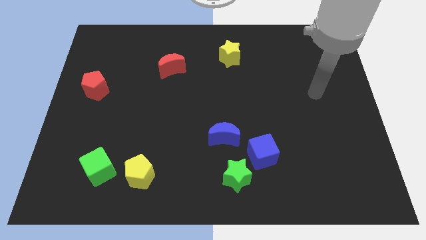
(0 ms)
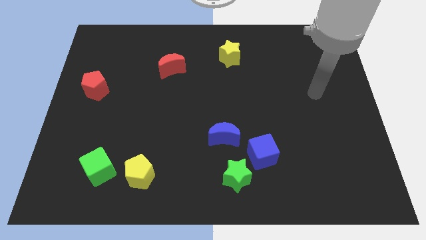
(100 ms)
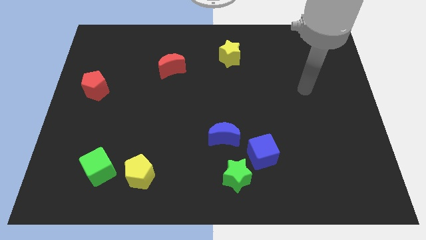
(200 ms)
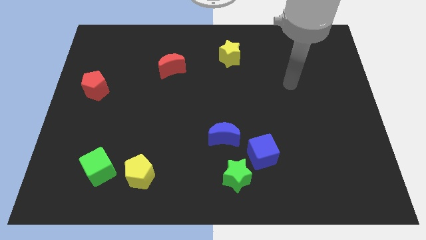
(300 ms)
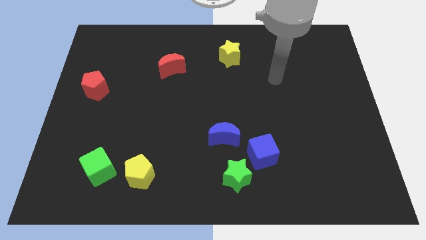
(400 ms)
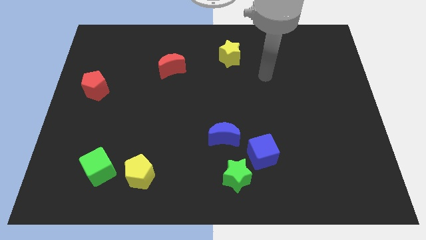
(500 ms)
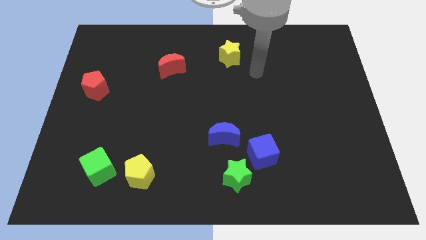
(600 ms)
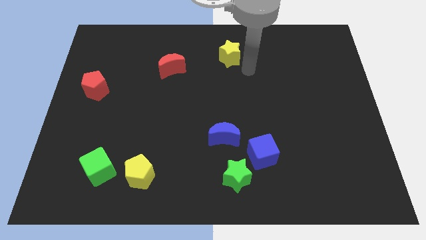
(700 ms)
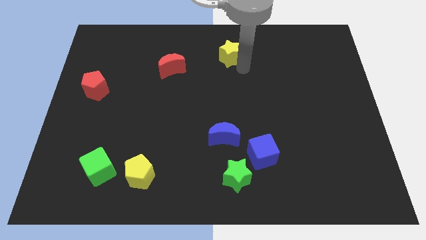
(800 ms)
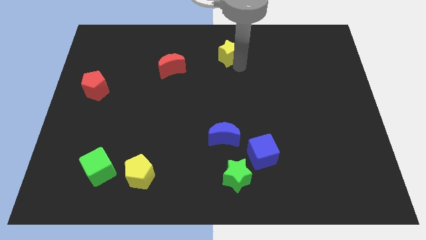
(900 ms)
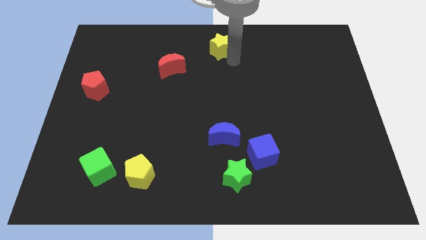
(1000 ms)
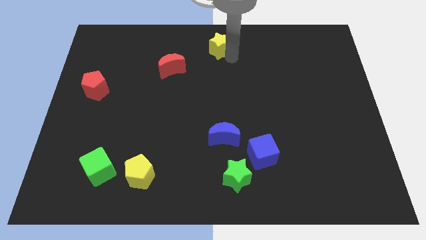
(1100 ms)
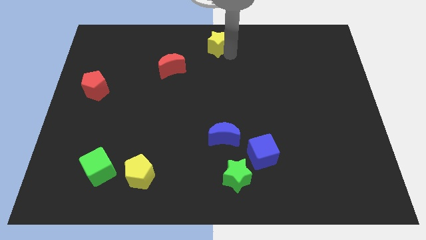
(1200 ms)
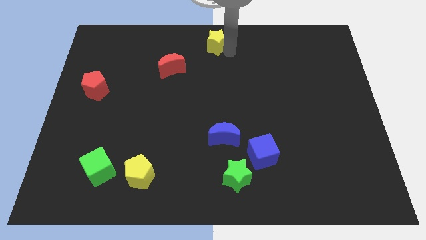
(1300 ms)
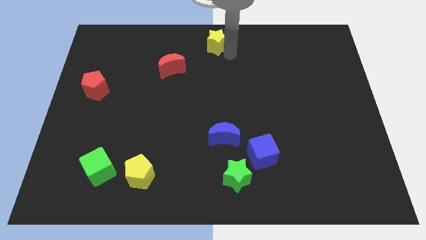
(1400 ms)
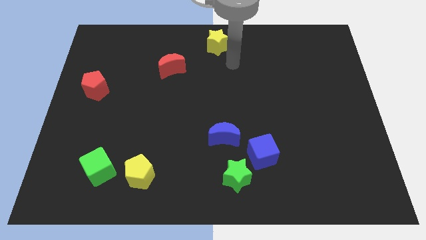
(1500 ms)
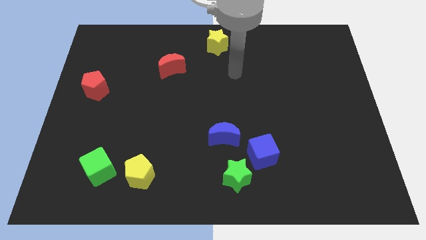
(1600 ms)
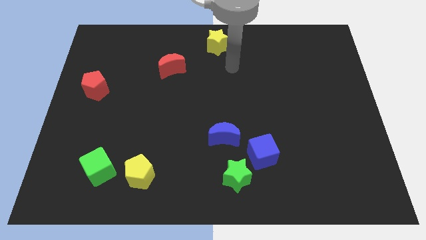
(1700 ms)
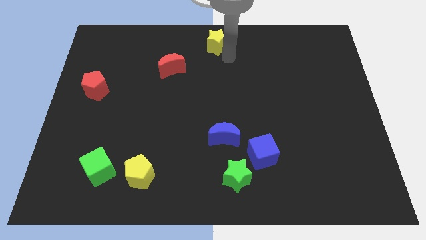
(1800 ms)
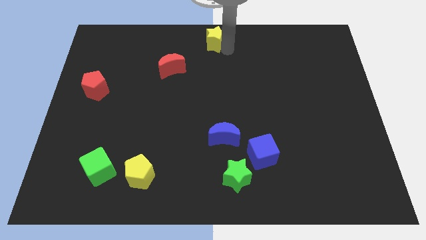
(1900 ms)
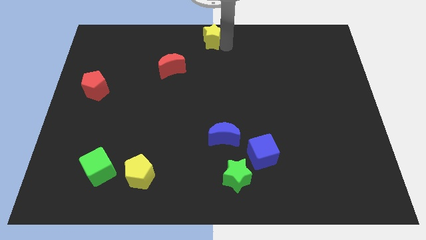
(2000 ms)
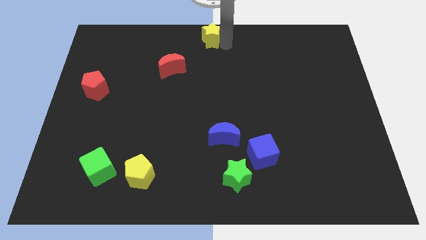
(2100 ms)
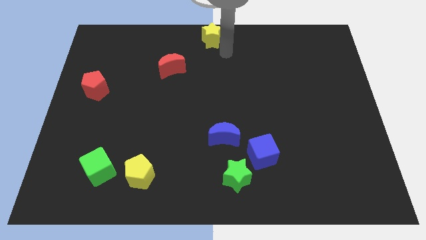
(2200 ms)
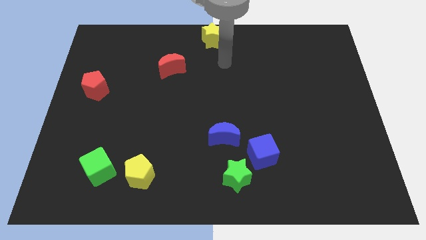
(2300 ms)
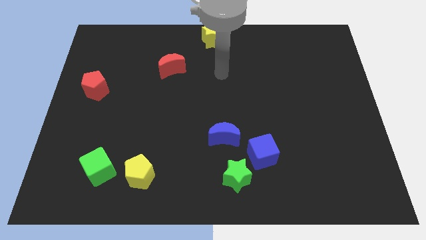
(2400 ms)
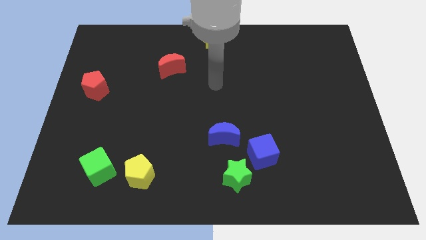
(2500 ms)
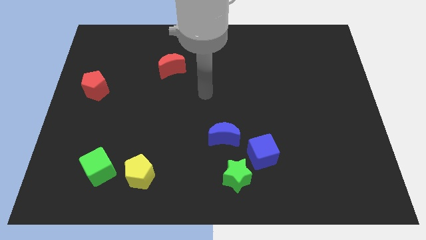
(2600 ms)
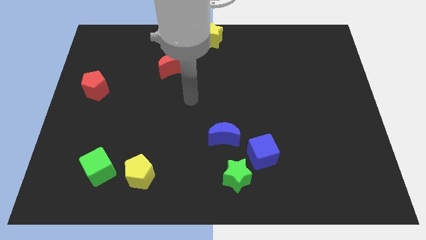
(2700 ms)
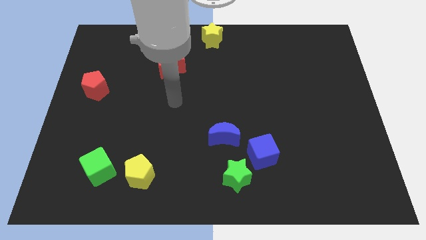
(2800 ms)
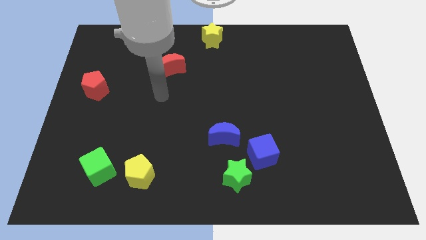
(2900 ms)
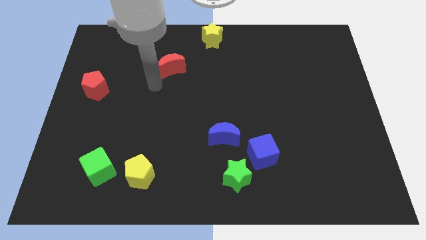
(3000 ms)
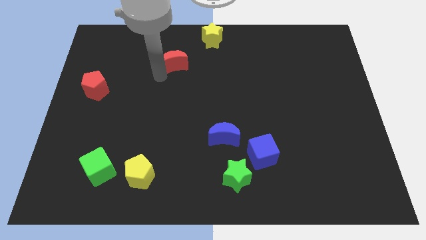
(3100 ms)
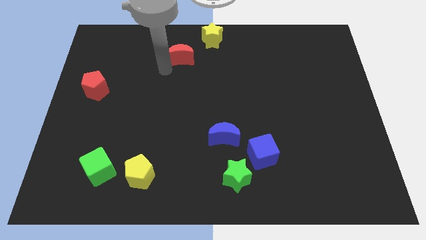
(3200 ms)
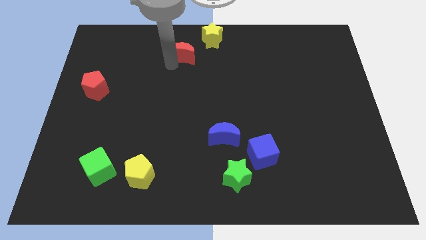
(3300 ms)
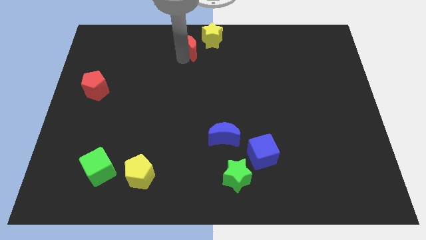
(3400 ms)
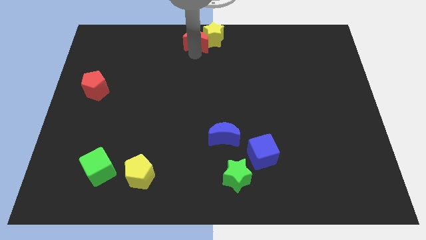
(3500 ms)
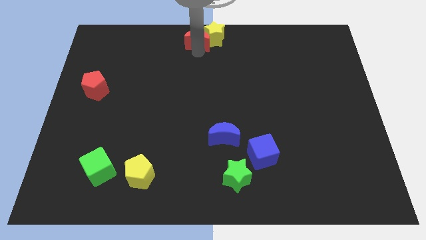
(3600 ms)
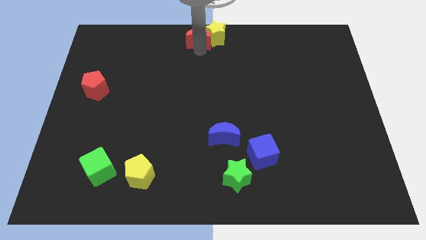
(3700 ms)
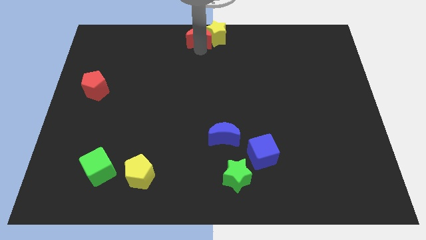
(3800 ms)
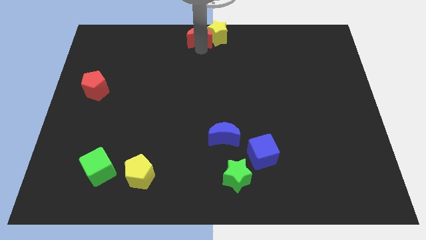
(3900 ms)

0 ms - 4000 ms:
move the yellow star and red crescent to the top center of the board

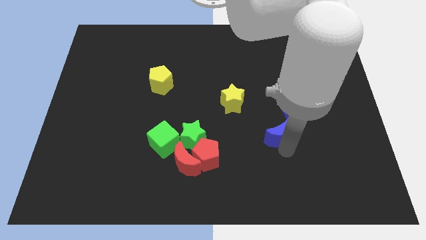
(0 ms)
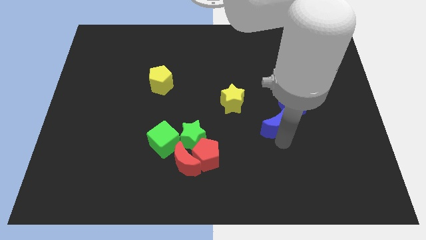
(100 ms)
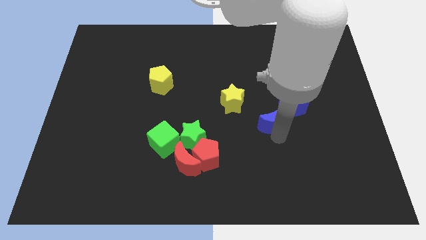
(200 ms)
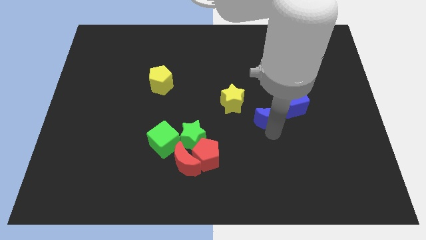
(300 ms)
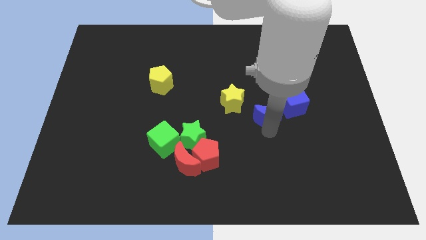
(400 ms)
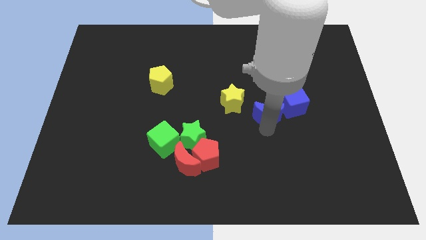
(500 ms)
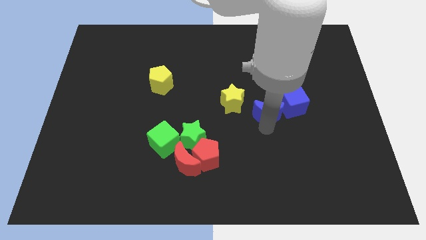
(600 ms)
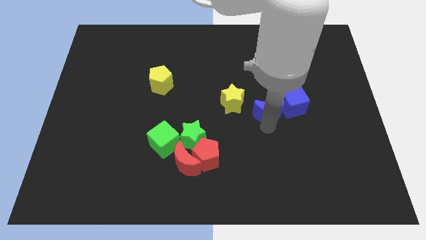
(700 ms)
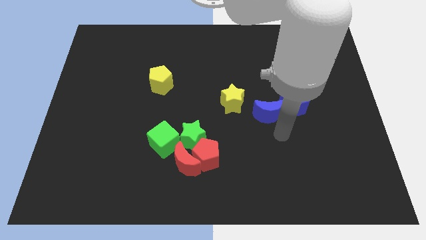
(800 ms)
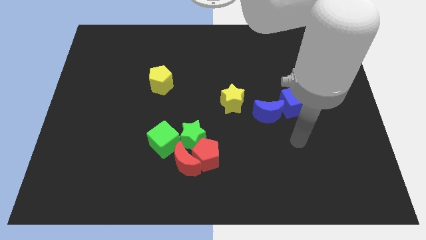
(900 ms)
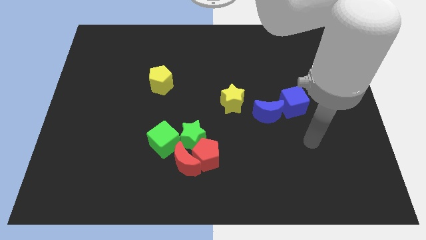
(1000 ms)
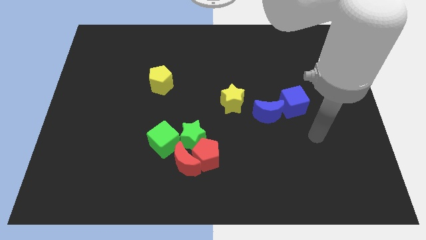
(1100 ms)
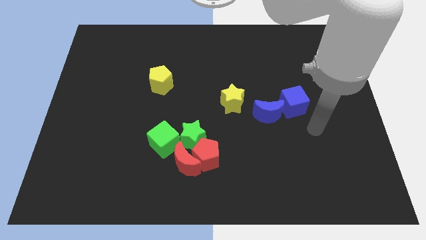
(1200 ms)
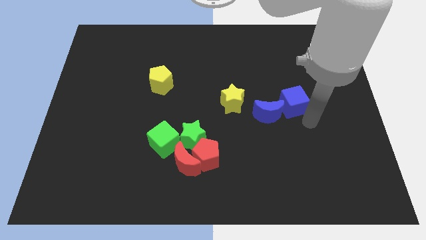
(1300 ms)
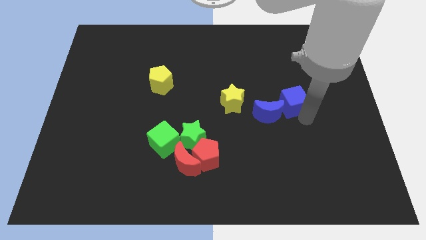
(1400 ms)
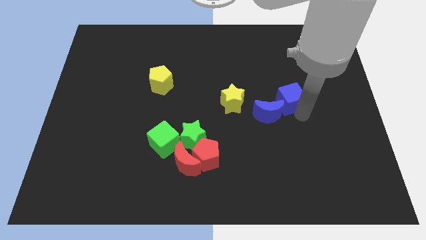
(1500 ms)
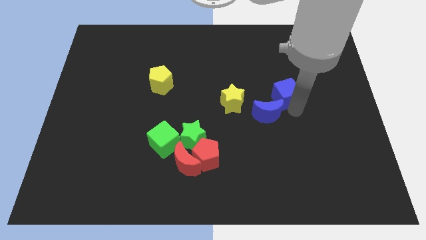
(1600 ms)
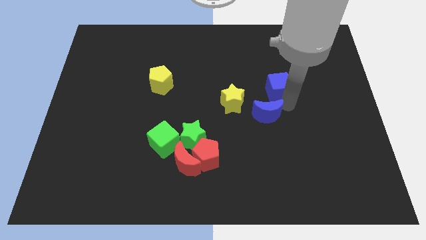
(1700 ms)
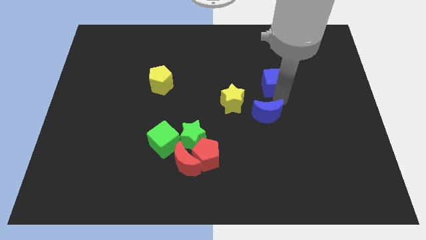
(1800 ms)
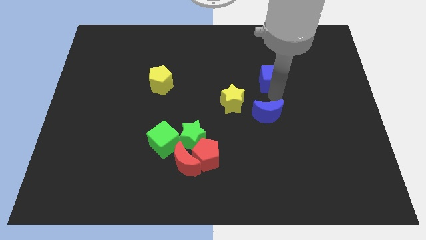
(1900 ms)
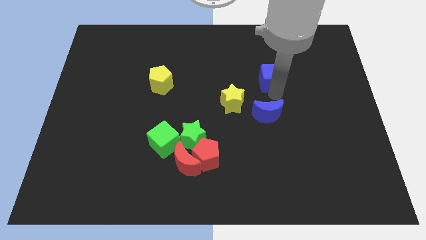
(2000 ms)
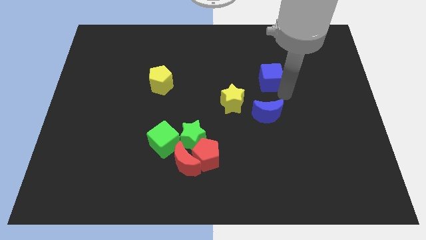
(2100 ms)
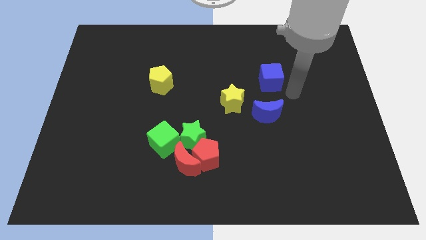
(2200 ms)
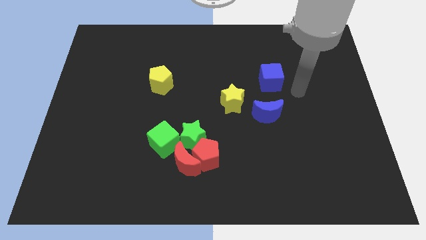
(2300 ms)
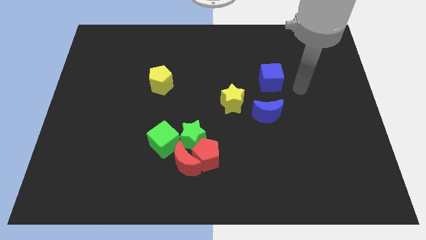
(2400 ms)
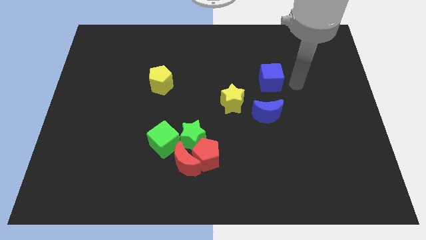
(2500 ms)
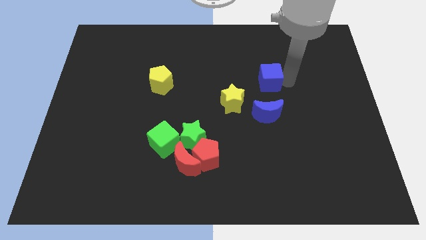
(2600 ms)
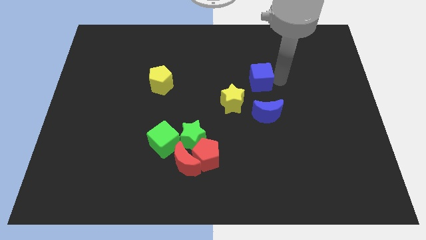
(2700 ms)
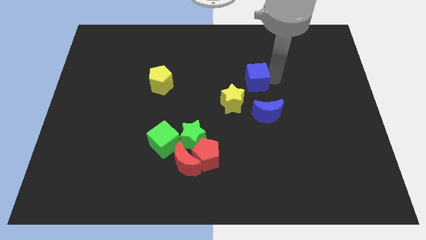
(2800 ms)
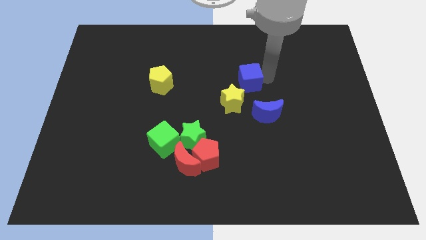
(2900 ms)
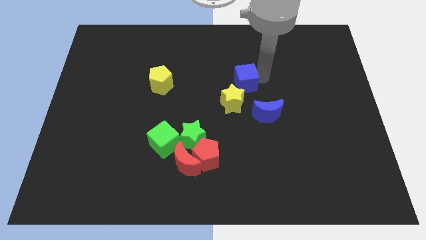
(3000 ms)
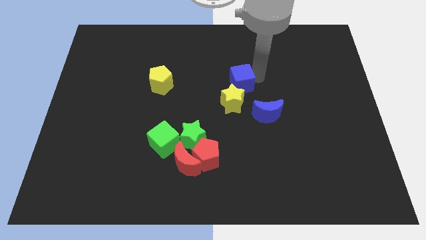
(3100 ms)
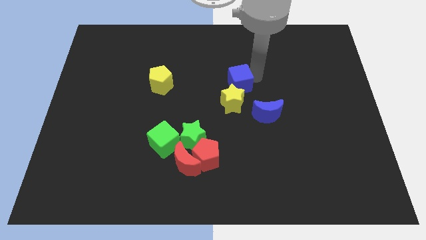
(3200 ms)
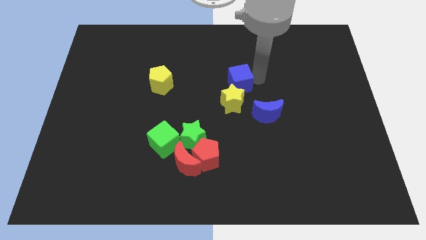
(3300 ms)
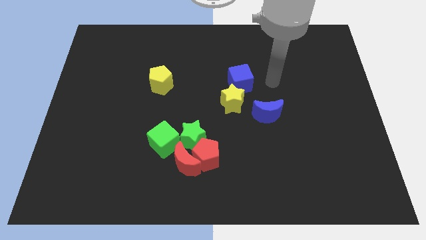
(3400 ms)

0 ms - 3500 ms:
place the blue cube above the yellow star

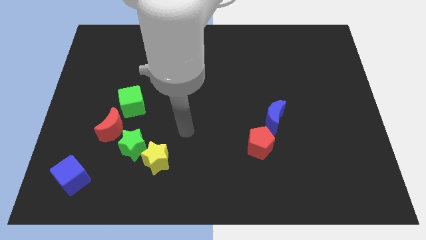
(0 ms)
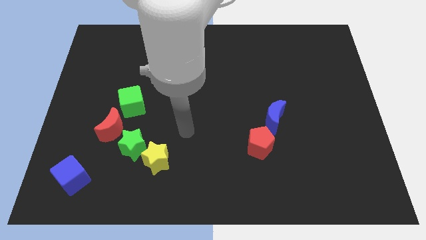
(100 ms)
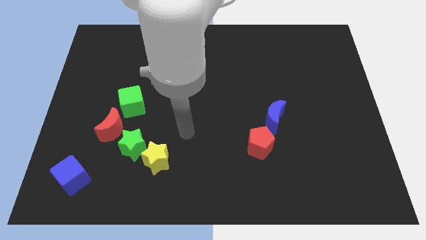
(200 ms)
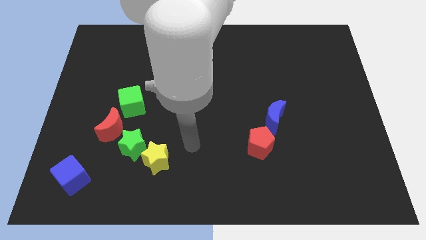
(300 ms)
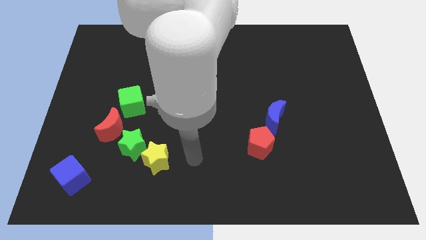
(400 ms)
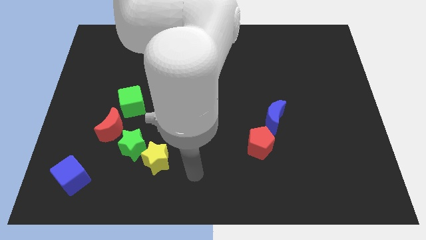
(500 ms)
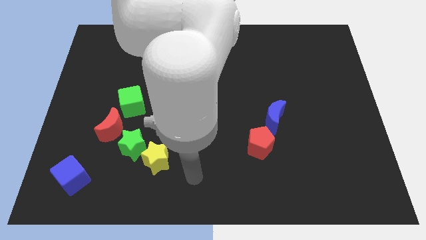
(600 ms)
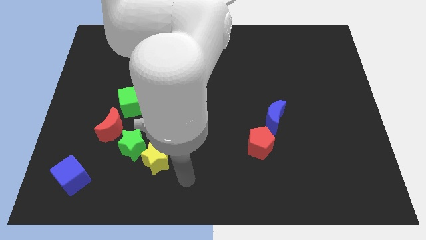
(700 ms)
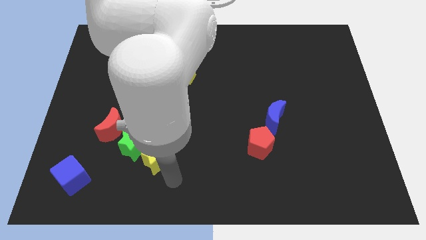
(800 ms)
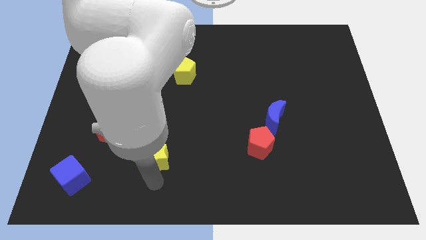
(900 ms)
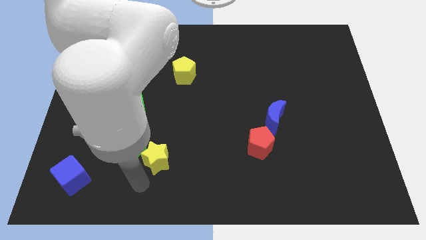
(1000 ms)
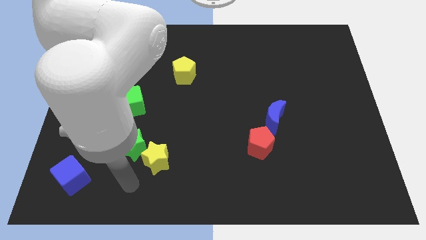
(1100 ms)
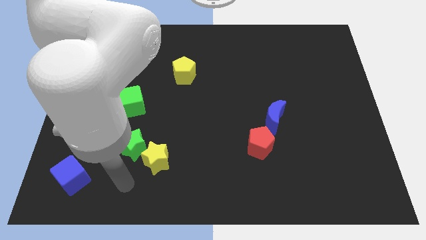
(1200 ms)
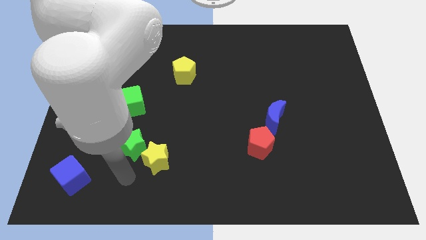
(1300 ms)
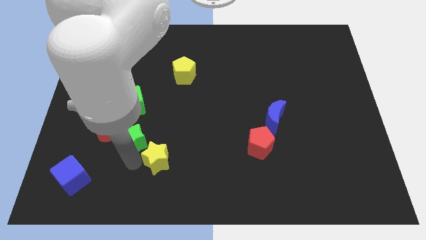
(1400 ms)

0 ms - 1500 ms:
tap the green star with your arm

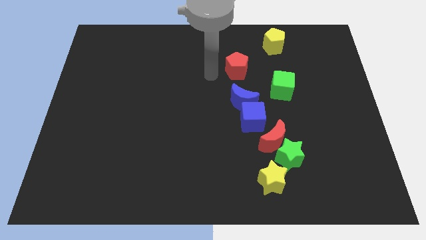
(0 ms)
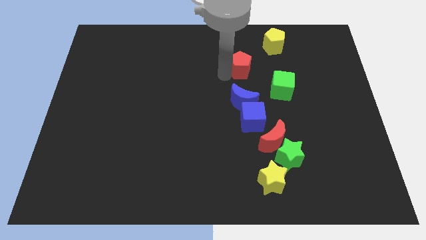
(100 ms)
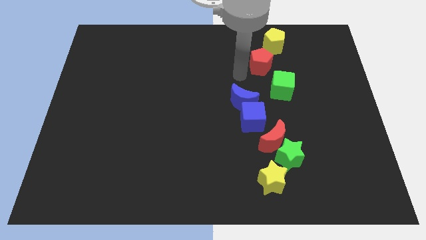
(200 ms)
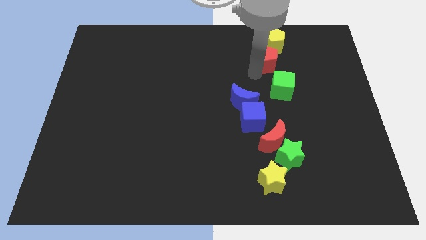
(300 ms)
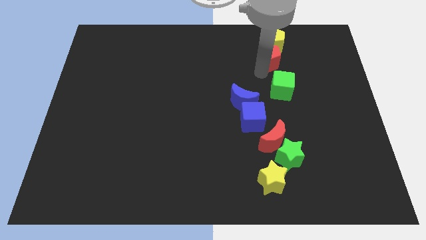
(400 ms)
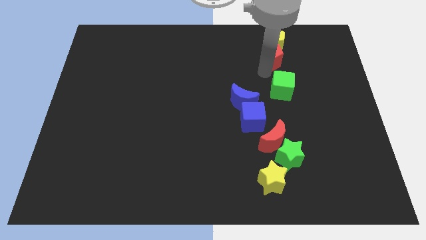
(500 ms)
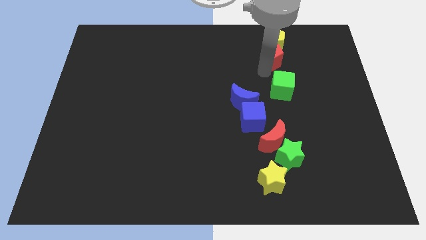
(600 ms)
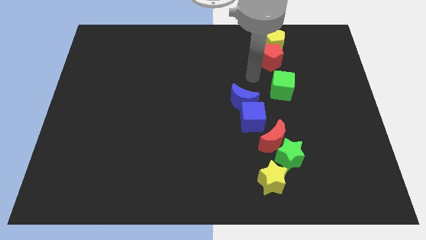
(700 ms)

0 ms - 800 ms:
place the red pentagon in between the yellow pentagon and the green cube
